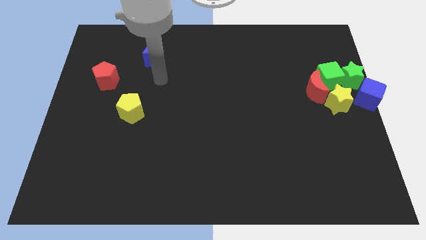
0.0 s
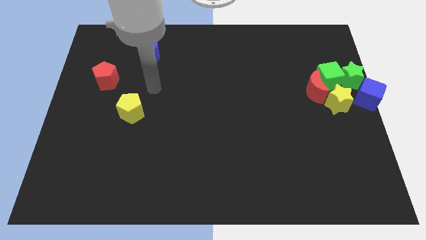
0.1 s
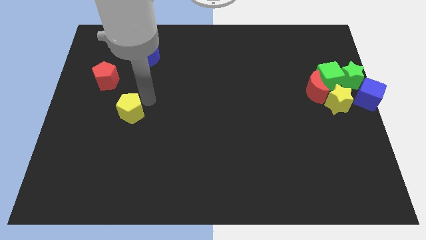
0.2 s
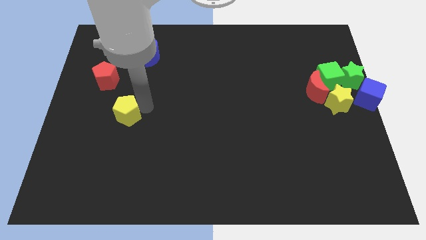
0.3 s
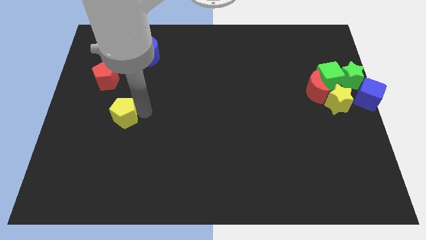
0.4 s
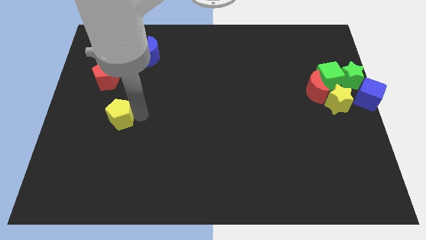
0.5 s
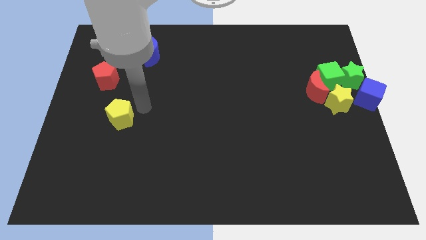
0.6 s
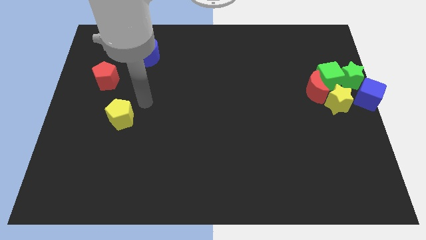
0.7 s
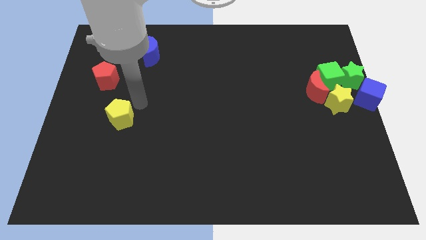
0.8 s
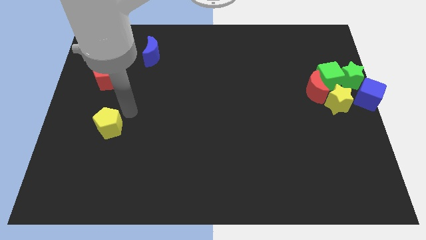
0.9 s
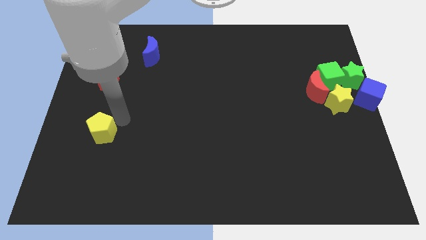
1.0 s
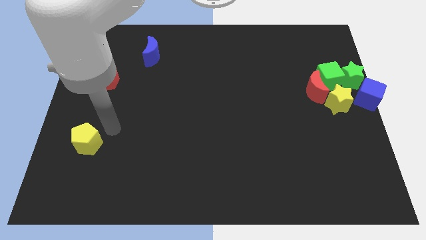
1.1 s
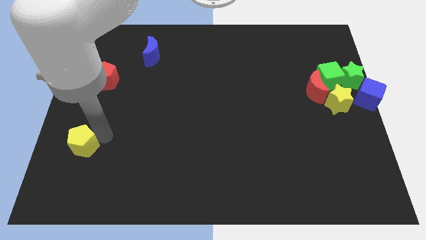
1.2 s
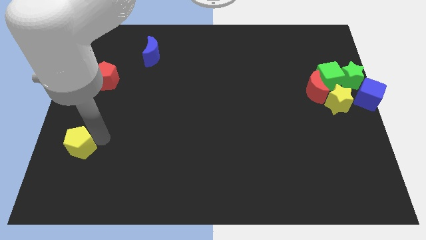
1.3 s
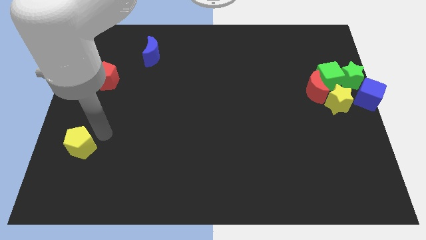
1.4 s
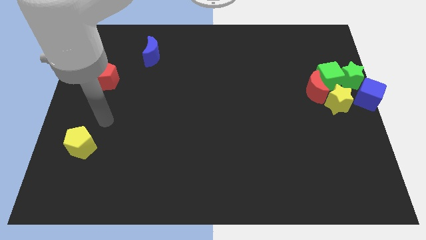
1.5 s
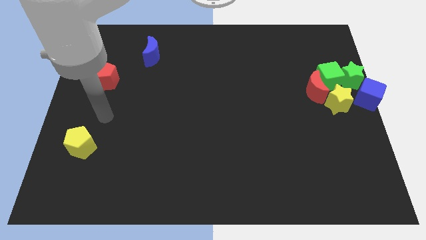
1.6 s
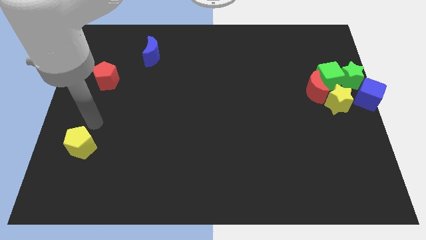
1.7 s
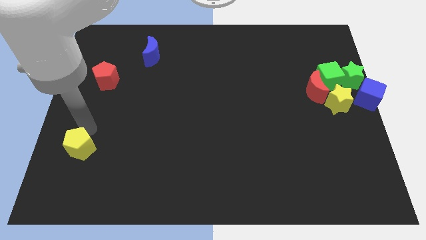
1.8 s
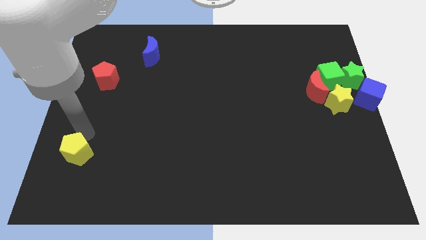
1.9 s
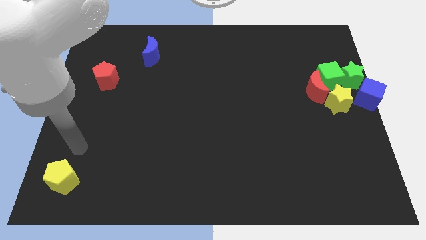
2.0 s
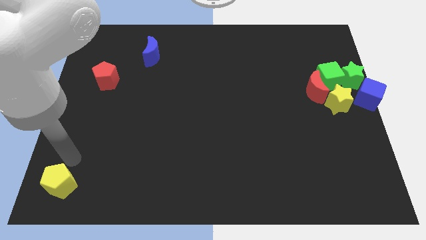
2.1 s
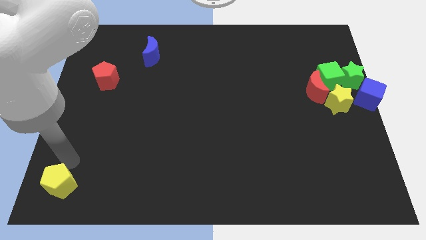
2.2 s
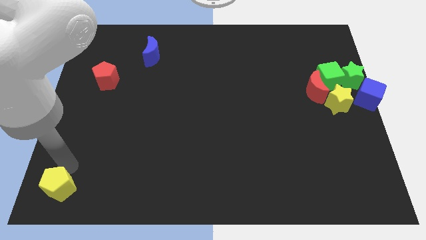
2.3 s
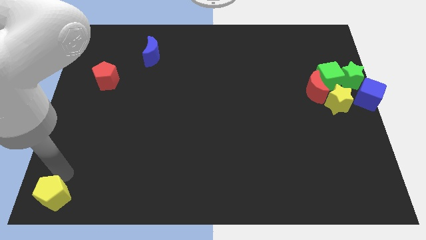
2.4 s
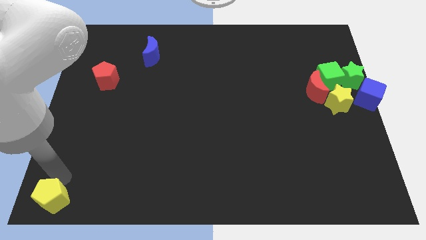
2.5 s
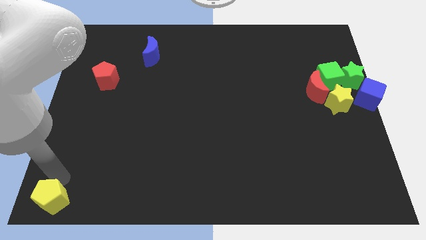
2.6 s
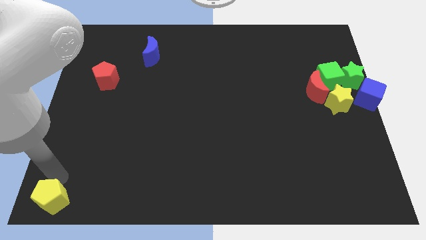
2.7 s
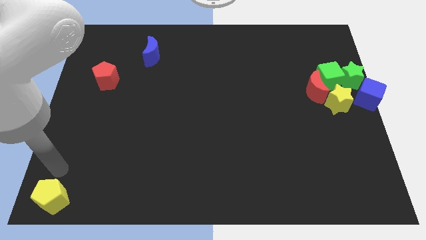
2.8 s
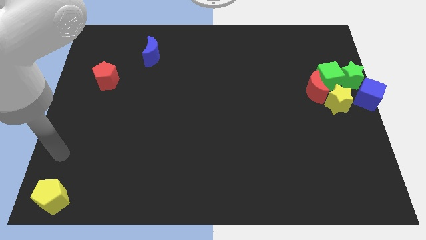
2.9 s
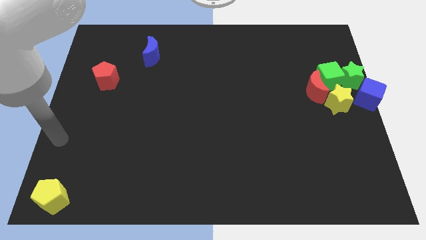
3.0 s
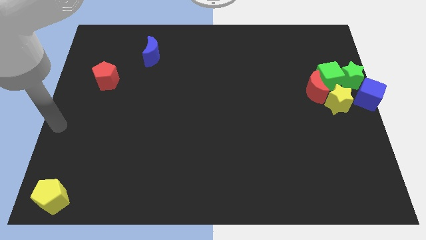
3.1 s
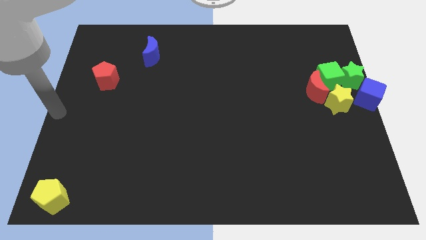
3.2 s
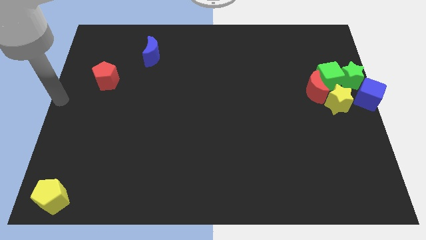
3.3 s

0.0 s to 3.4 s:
place the yellow pentagon to the left bottom of the board

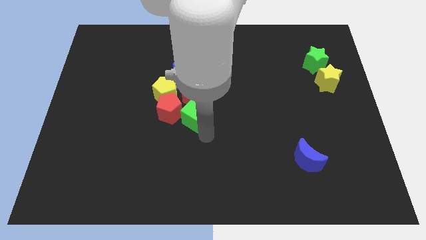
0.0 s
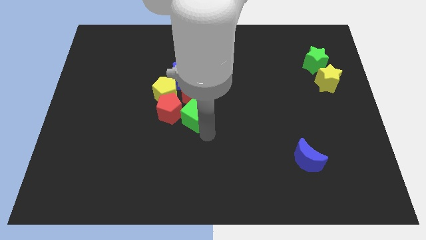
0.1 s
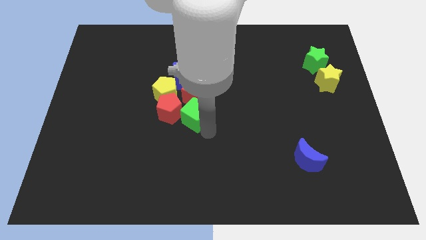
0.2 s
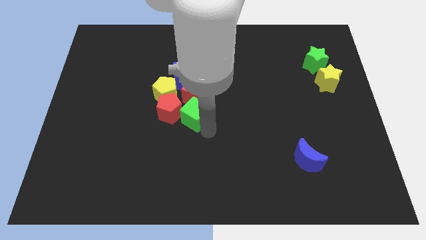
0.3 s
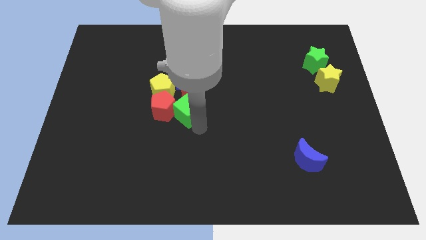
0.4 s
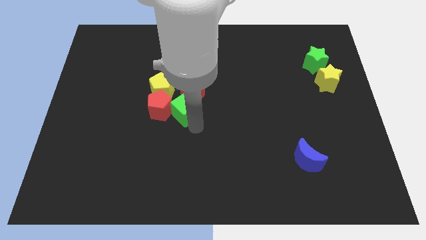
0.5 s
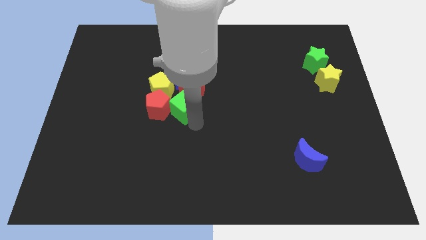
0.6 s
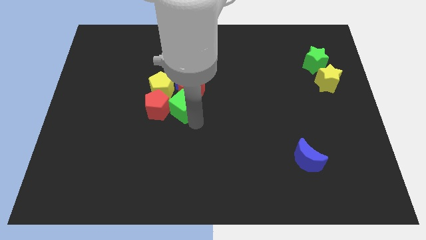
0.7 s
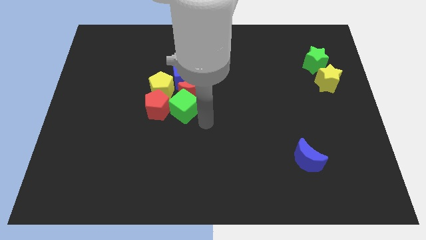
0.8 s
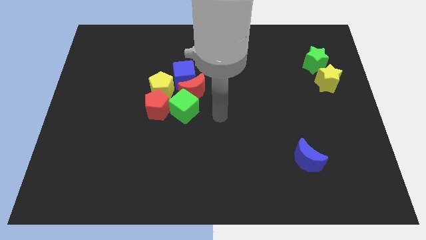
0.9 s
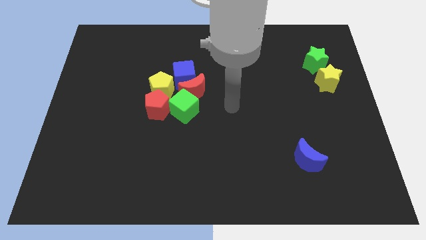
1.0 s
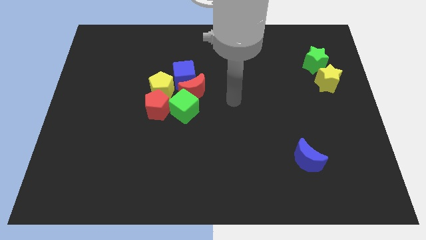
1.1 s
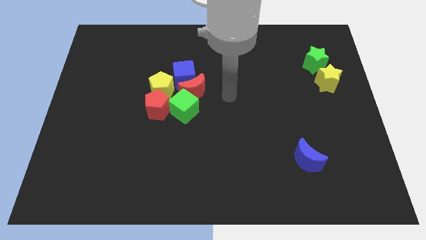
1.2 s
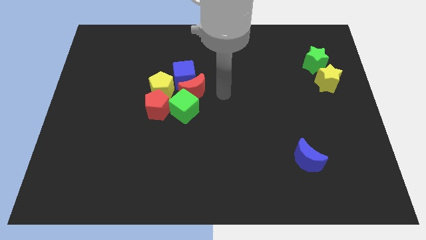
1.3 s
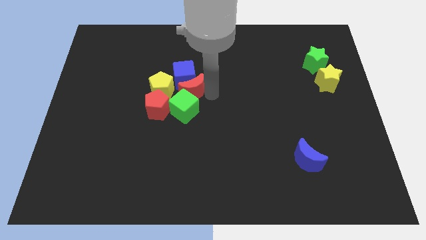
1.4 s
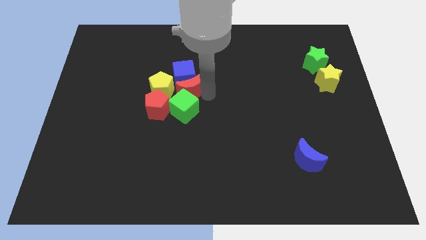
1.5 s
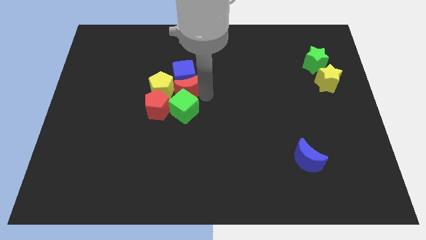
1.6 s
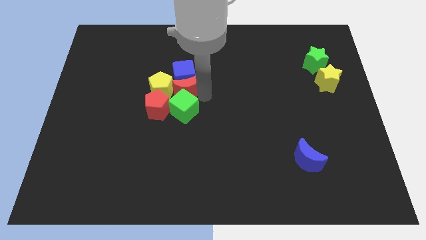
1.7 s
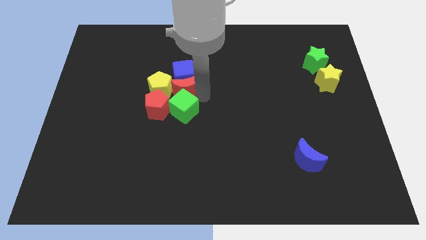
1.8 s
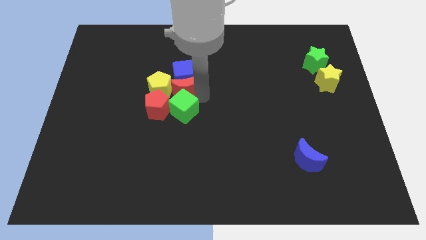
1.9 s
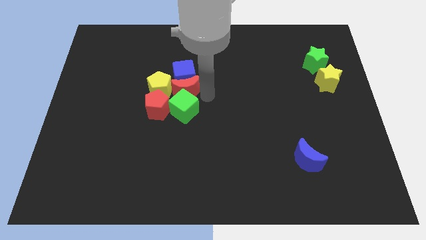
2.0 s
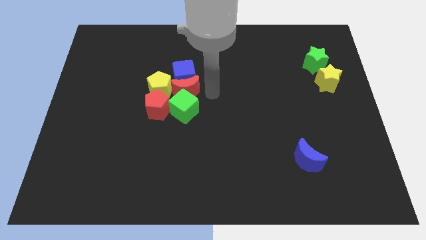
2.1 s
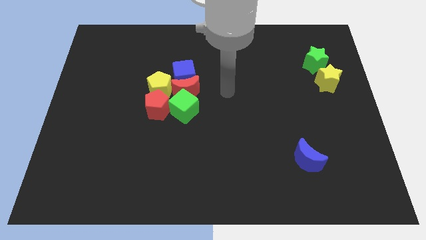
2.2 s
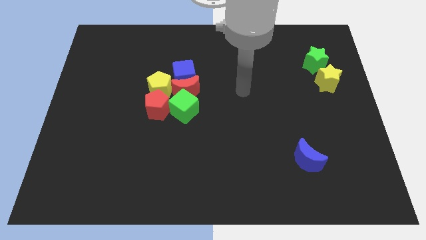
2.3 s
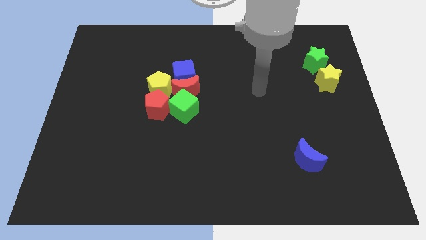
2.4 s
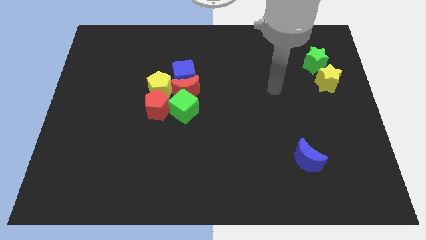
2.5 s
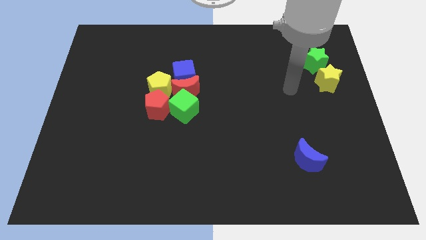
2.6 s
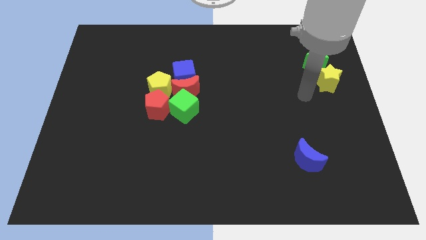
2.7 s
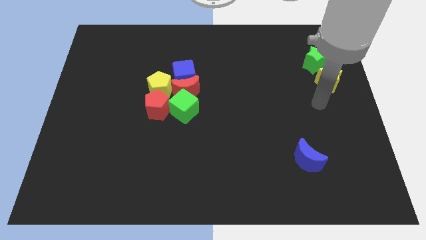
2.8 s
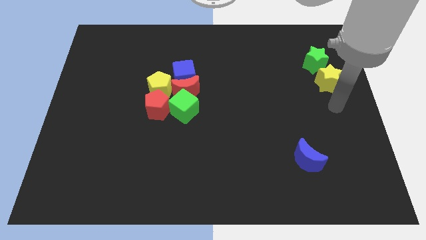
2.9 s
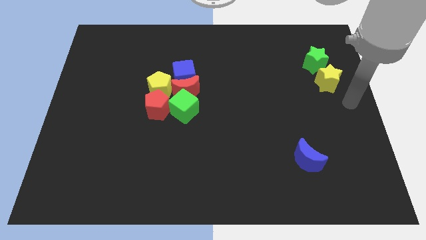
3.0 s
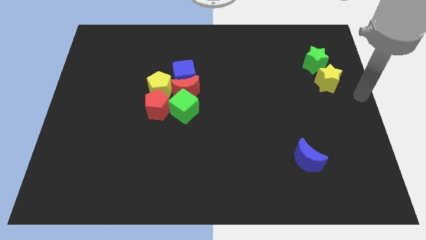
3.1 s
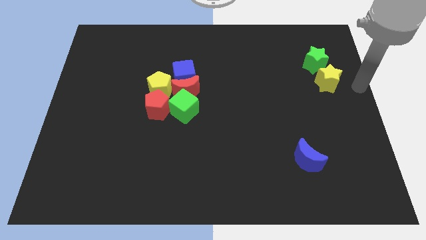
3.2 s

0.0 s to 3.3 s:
adjust the red moon in between the green and the blue cube

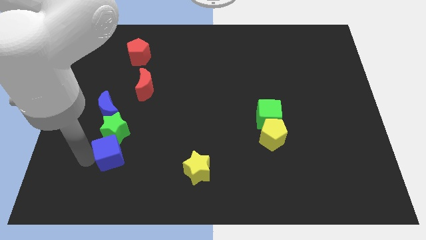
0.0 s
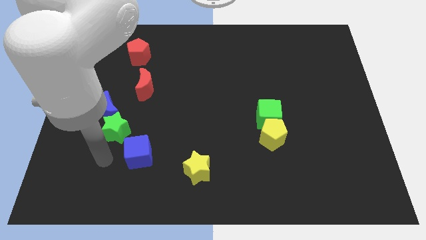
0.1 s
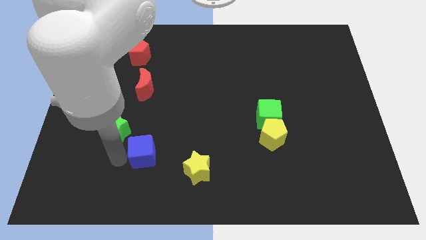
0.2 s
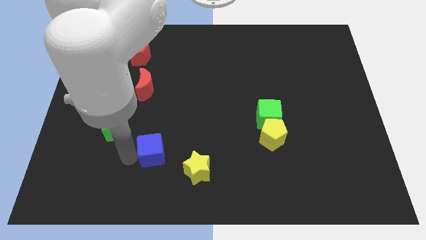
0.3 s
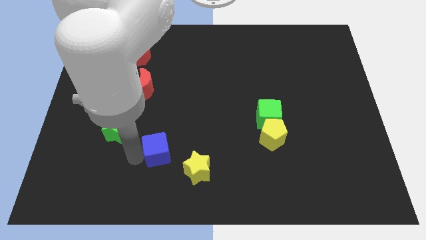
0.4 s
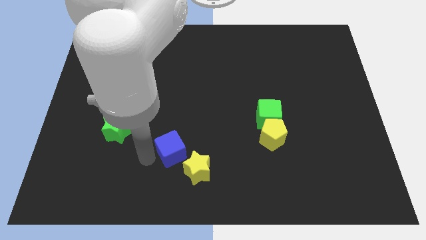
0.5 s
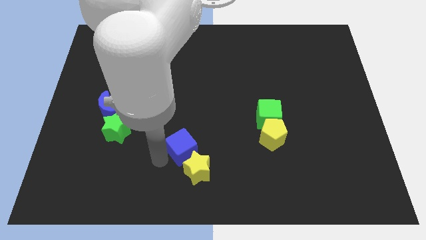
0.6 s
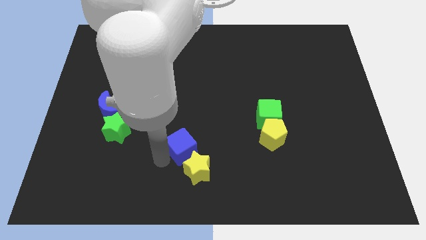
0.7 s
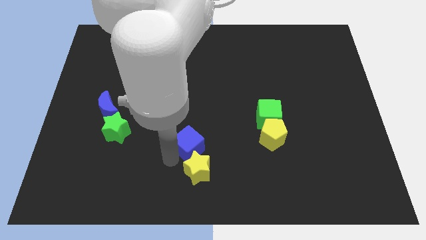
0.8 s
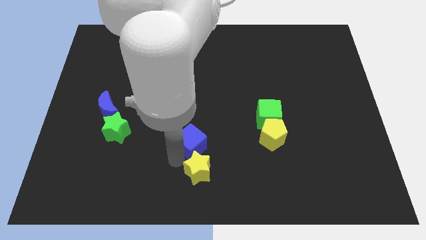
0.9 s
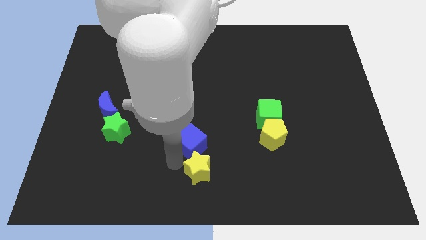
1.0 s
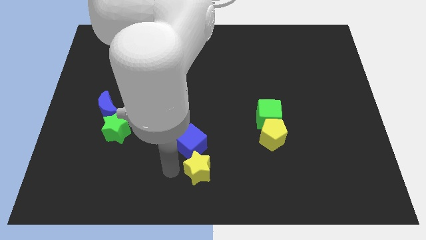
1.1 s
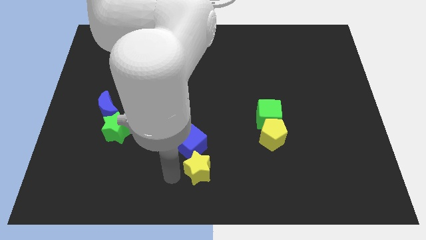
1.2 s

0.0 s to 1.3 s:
push blue cube above yellow star

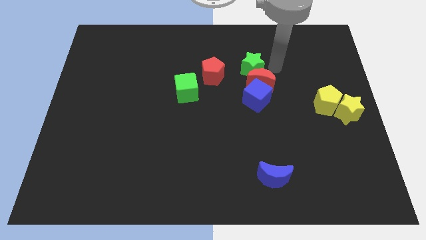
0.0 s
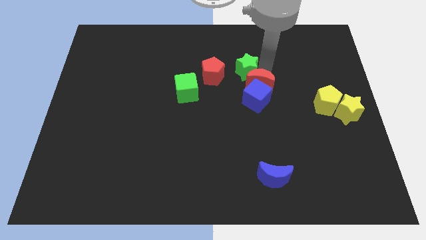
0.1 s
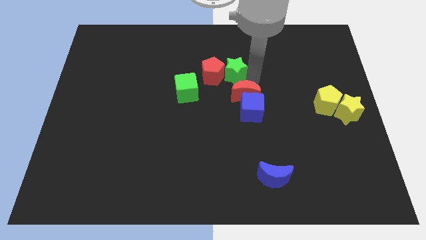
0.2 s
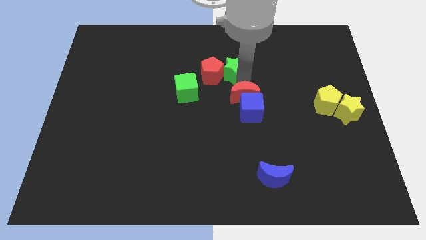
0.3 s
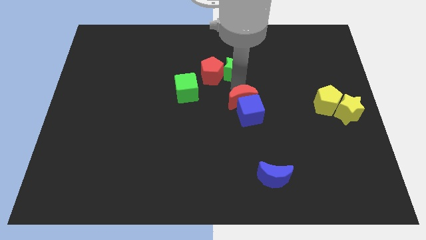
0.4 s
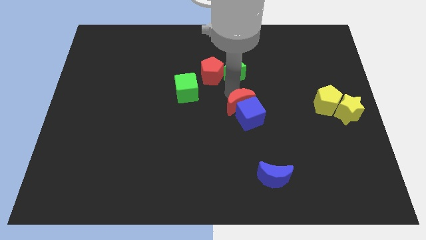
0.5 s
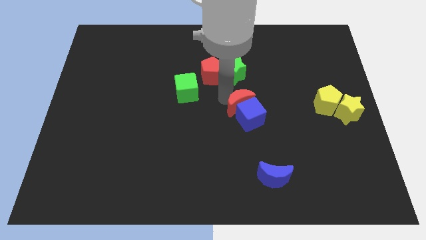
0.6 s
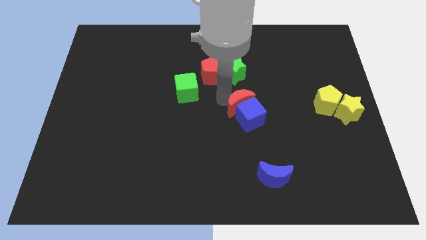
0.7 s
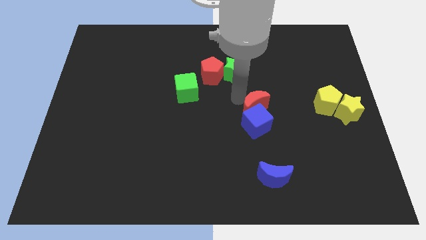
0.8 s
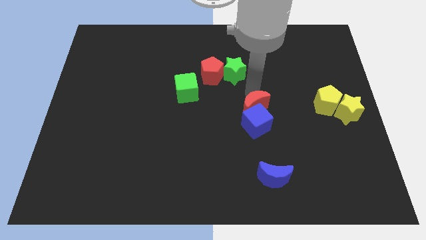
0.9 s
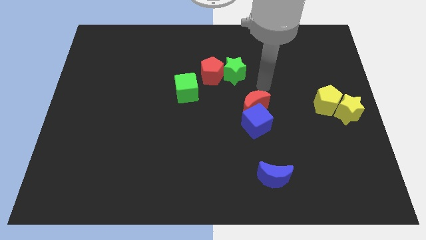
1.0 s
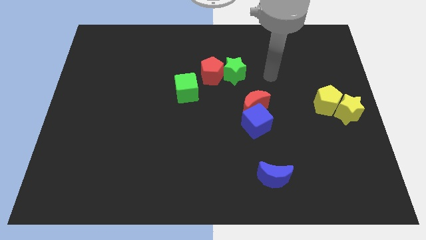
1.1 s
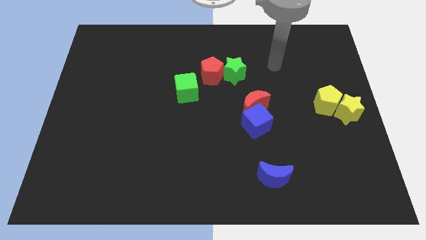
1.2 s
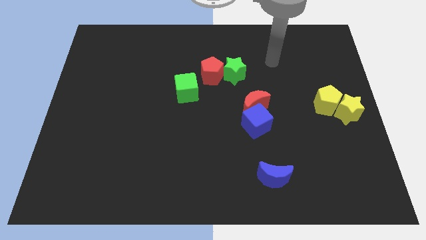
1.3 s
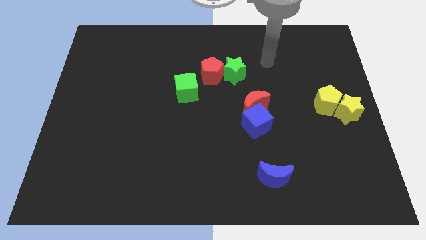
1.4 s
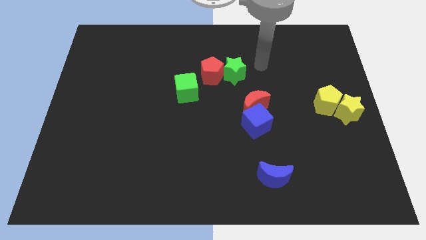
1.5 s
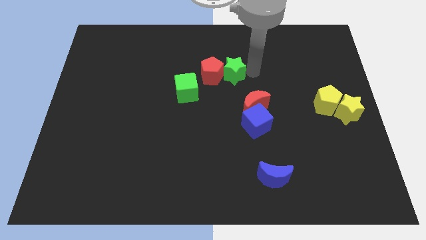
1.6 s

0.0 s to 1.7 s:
push the red moon along with the blue cube slightly downwards
